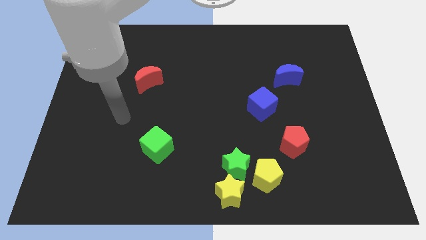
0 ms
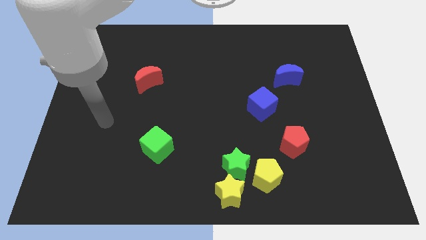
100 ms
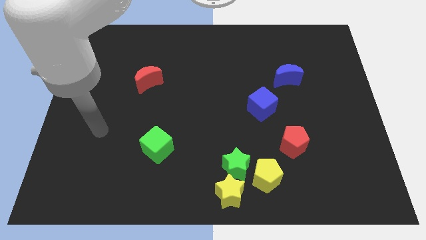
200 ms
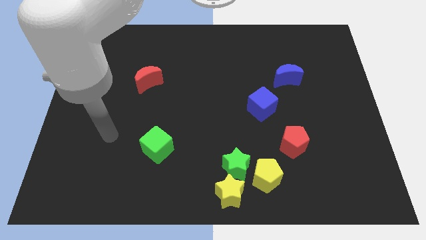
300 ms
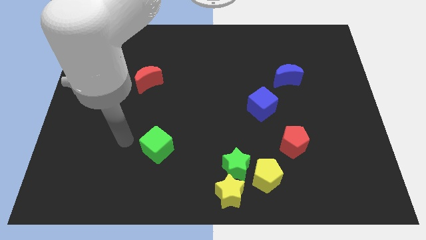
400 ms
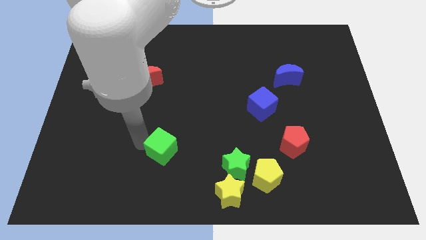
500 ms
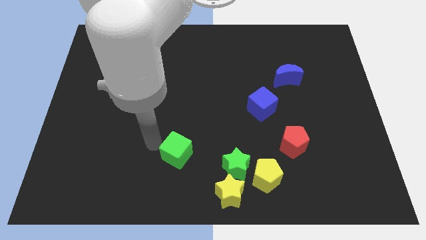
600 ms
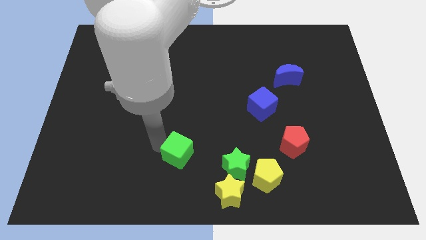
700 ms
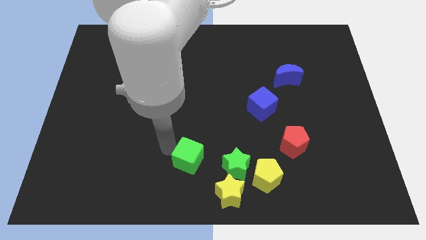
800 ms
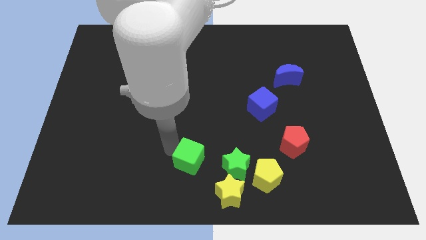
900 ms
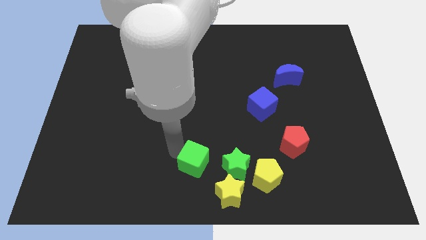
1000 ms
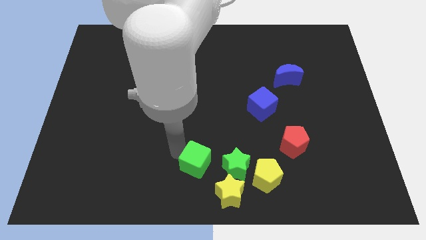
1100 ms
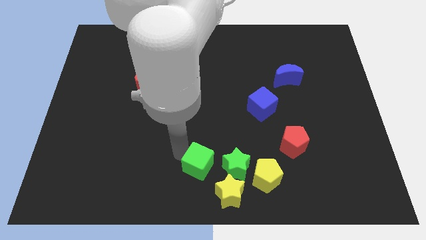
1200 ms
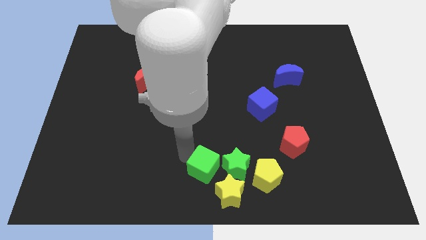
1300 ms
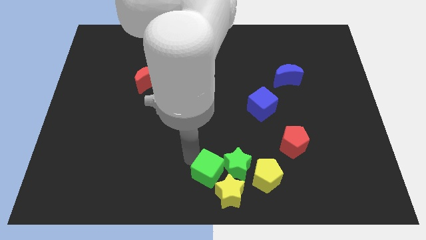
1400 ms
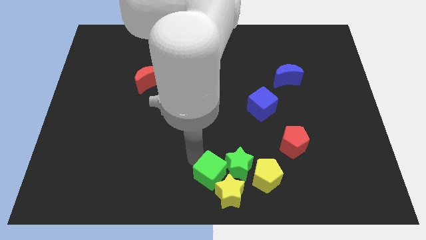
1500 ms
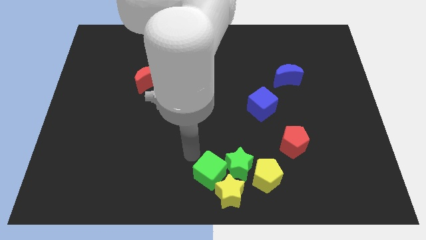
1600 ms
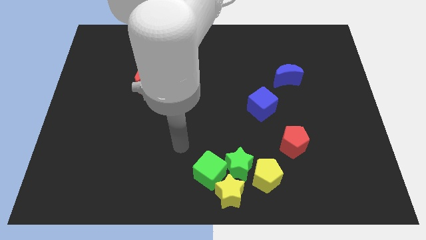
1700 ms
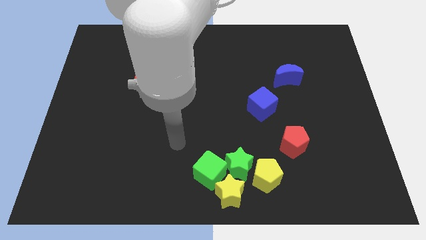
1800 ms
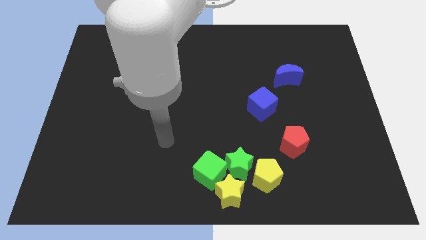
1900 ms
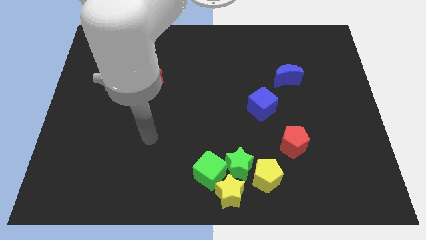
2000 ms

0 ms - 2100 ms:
move the green cube left beside the two stars

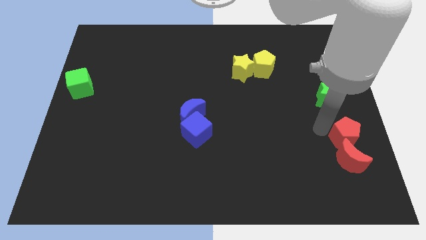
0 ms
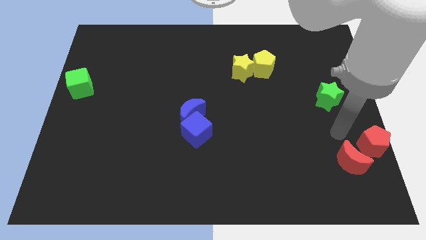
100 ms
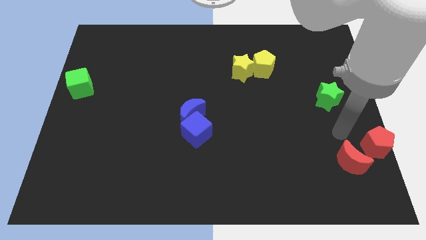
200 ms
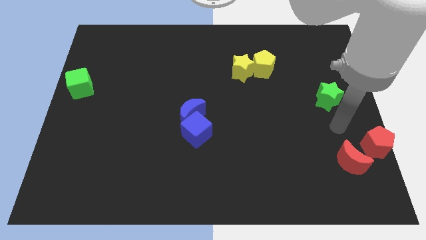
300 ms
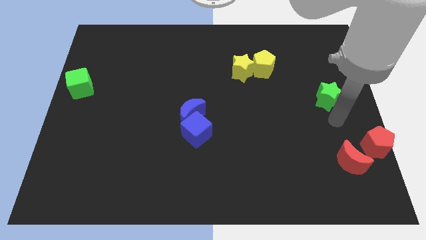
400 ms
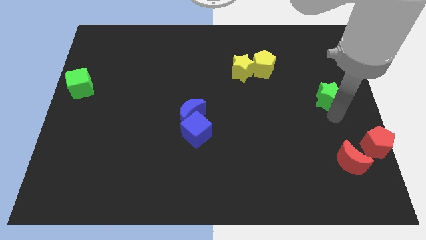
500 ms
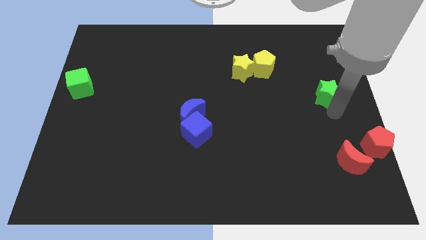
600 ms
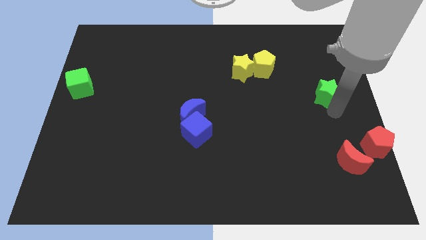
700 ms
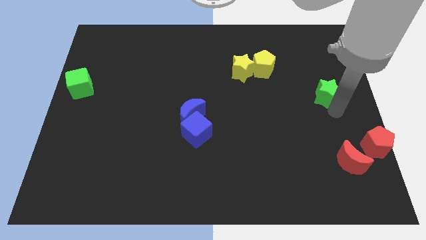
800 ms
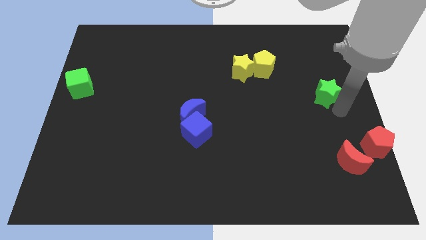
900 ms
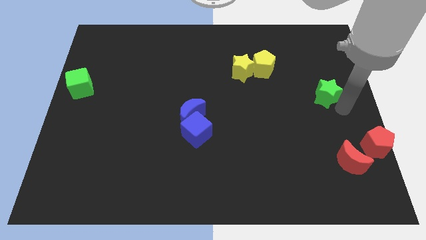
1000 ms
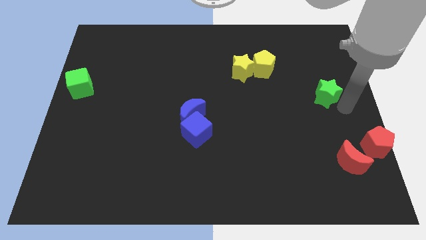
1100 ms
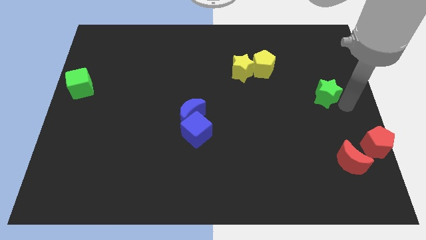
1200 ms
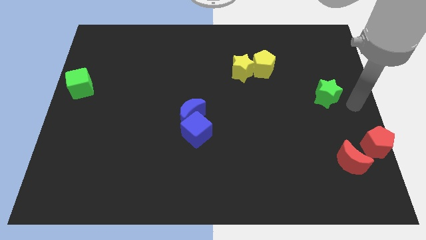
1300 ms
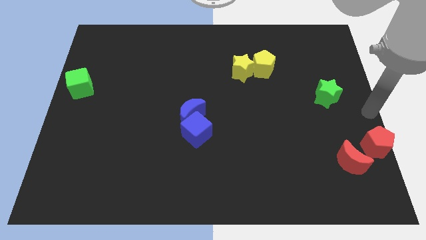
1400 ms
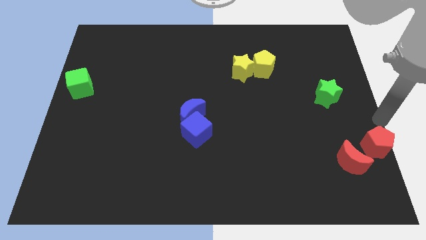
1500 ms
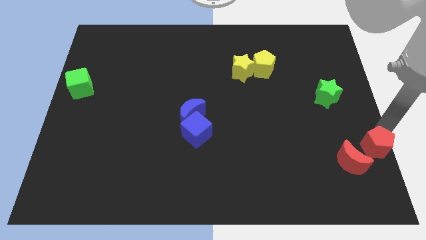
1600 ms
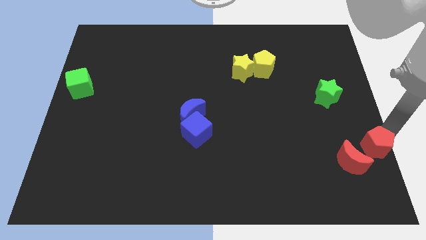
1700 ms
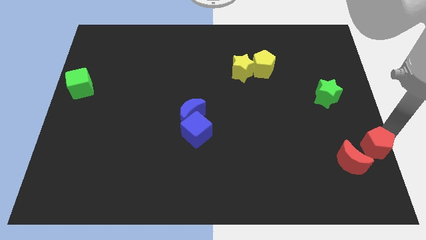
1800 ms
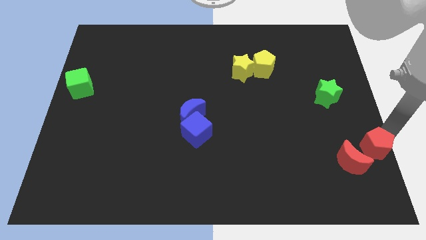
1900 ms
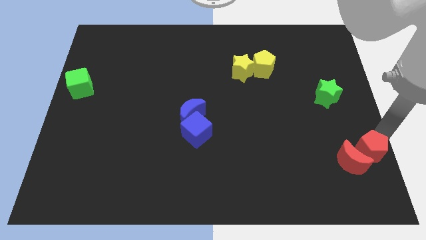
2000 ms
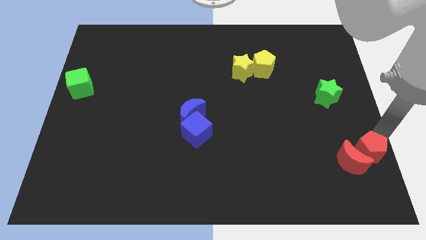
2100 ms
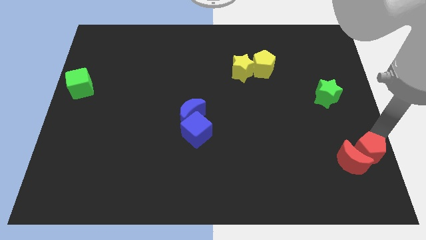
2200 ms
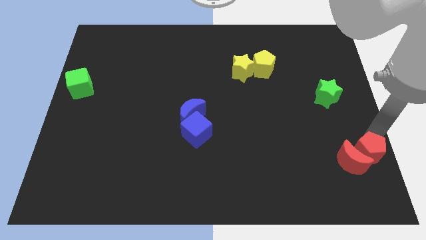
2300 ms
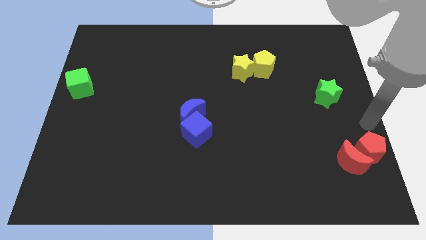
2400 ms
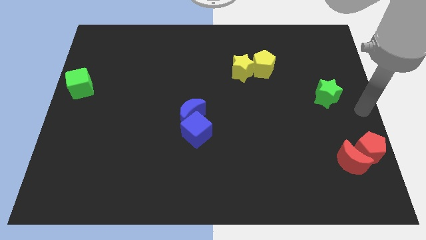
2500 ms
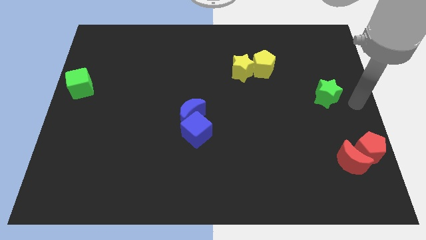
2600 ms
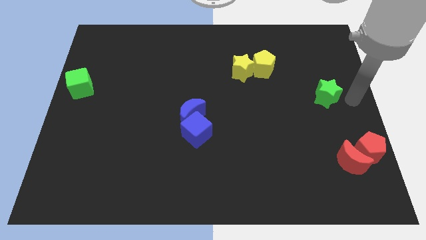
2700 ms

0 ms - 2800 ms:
slightly move the red pentagon into red moon

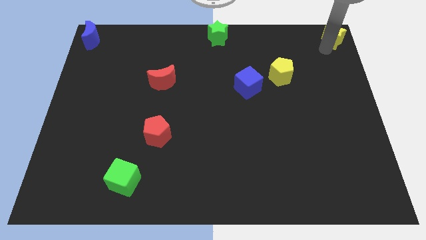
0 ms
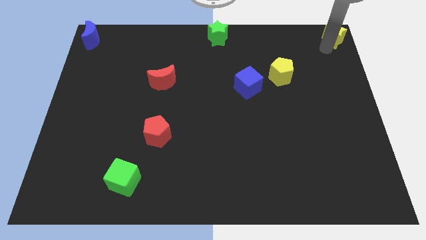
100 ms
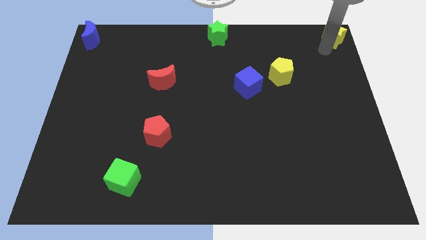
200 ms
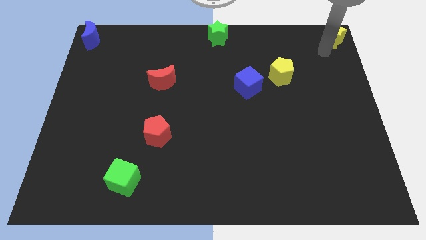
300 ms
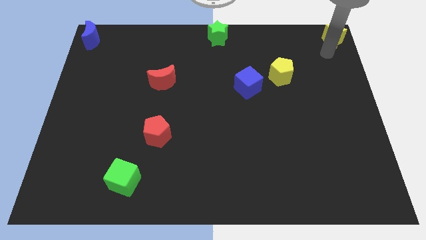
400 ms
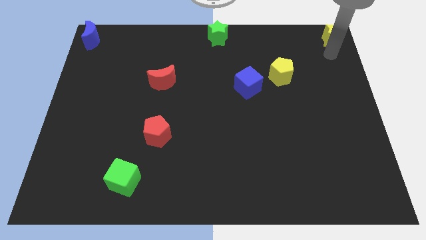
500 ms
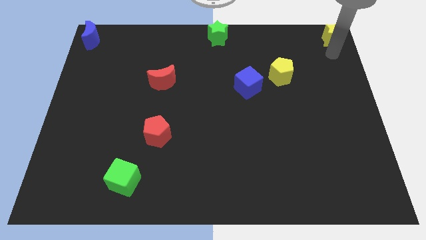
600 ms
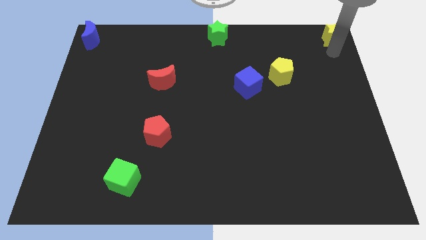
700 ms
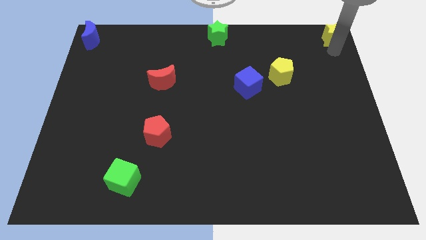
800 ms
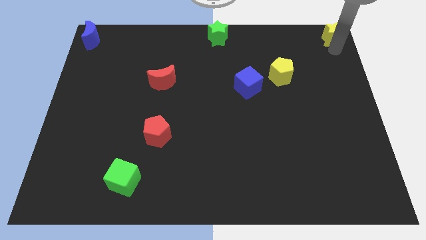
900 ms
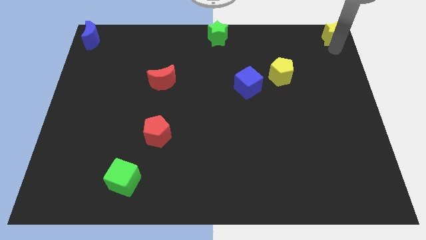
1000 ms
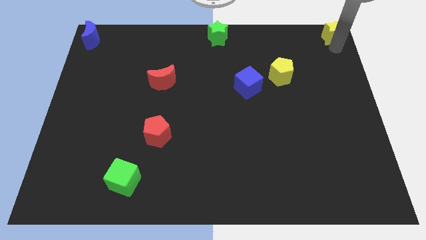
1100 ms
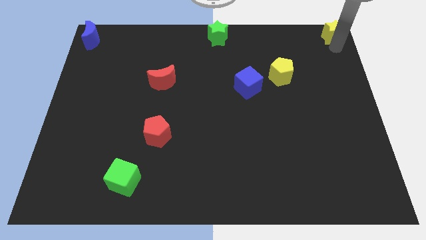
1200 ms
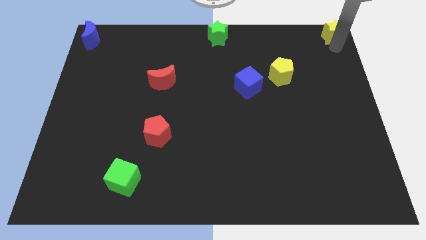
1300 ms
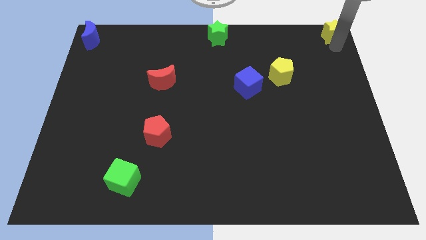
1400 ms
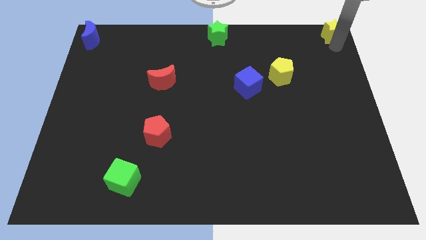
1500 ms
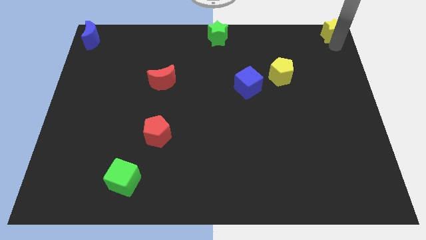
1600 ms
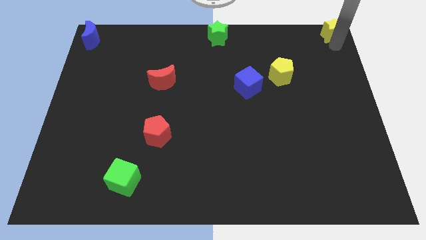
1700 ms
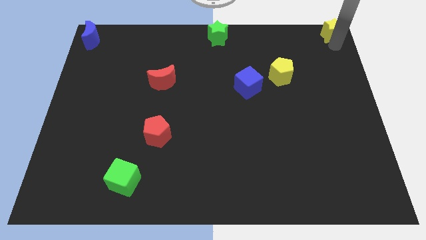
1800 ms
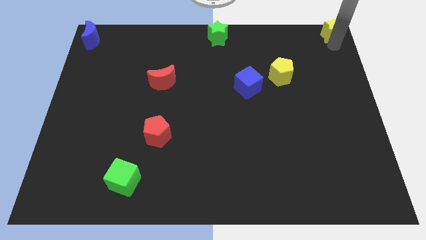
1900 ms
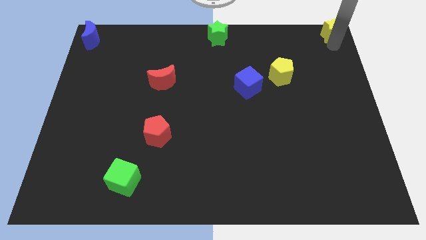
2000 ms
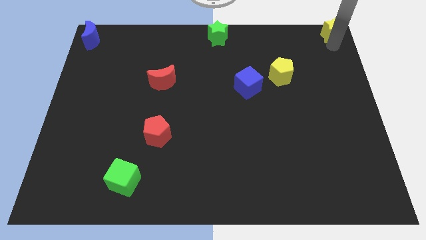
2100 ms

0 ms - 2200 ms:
place the yellow star at the top right corner of the board

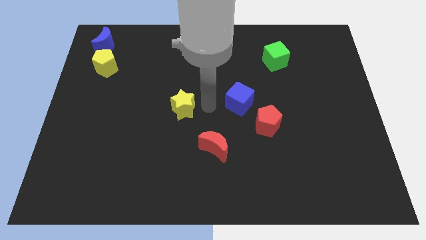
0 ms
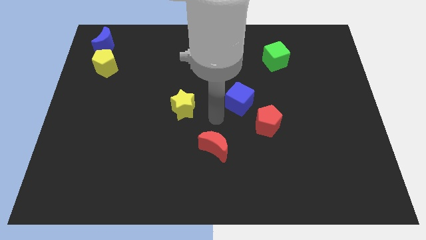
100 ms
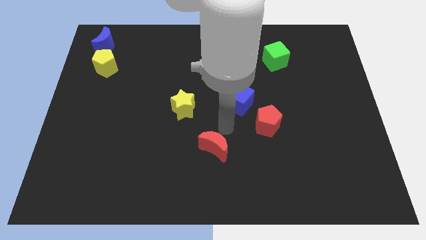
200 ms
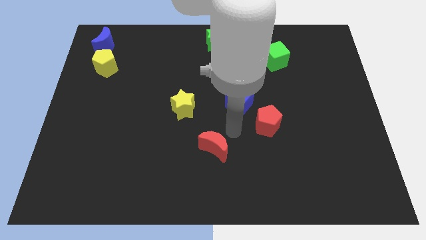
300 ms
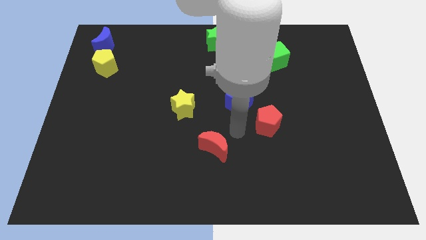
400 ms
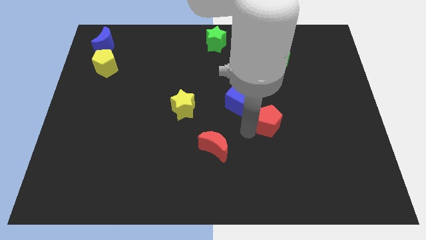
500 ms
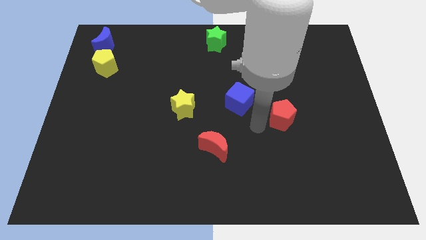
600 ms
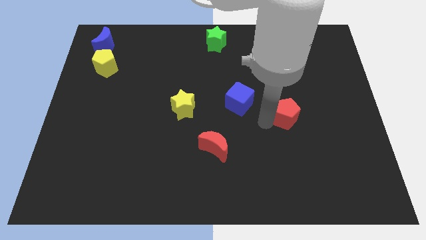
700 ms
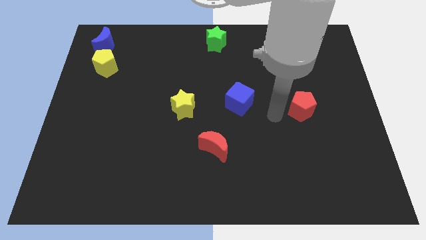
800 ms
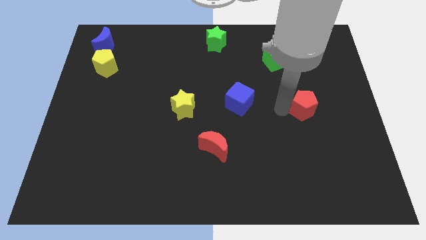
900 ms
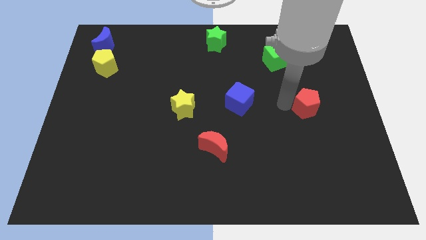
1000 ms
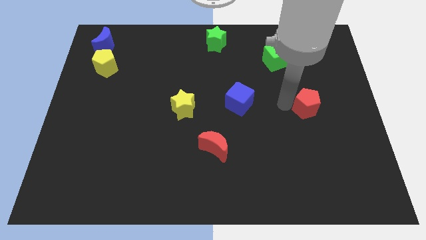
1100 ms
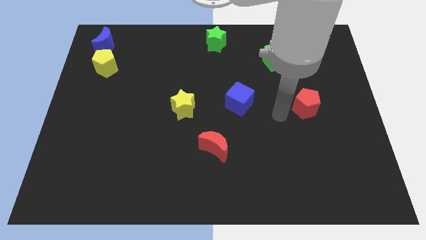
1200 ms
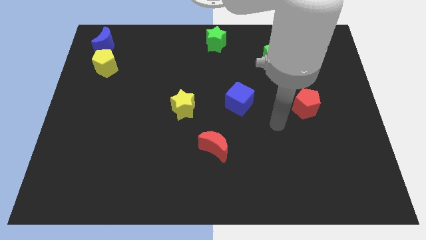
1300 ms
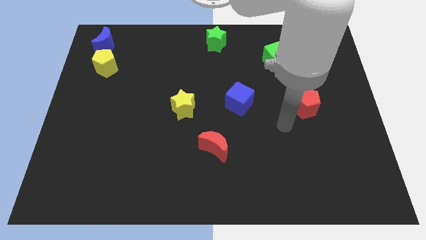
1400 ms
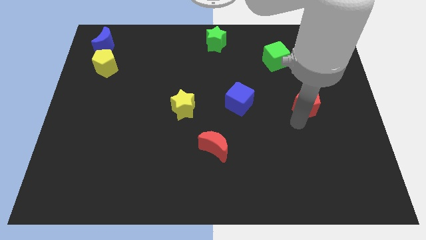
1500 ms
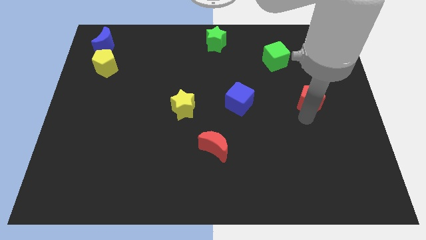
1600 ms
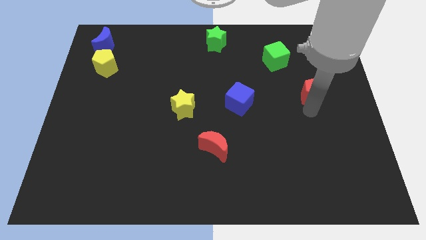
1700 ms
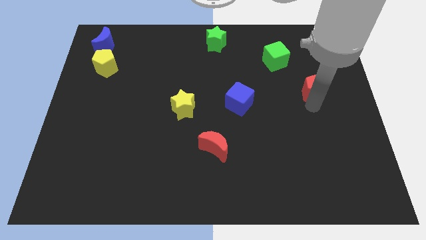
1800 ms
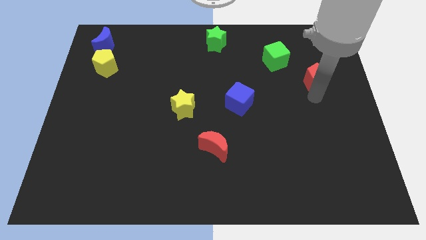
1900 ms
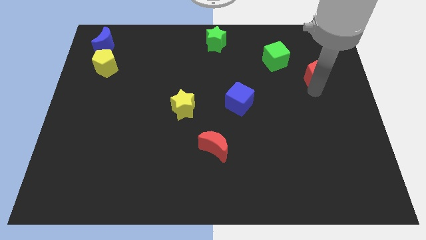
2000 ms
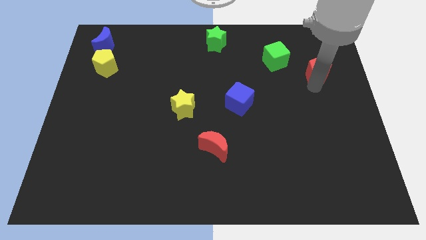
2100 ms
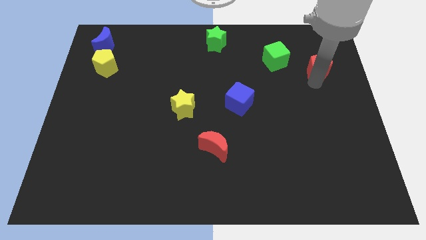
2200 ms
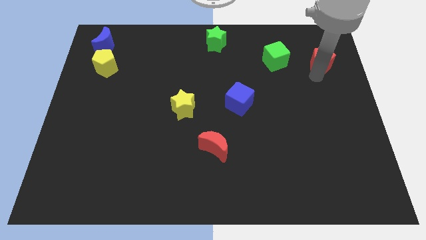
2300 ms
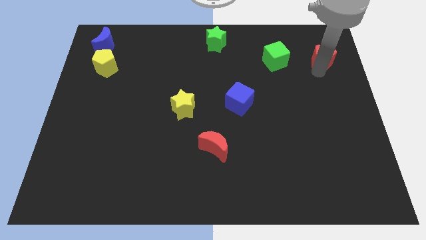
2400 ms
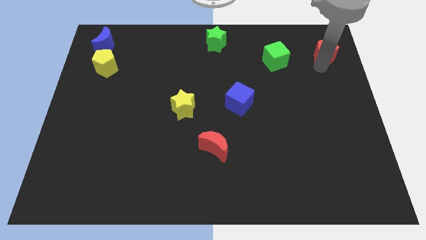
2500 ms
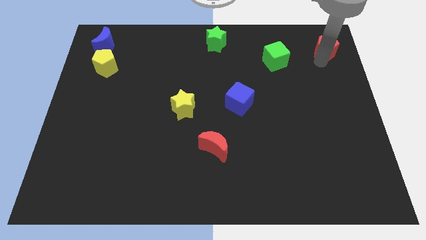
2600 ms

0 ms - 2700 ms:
place red pentagon parallel to green cube
